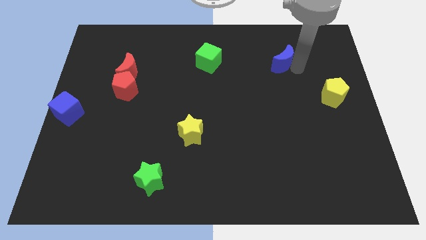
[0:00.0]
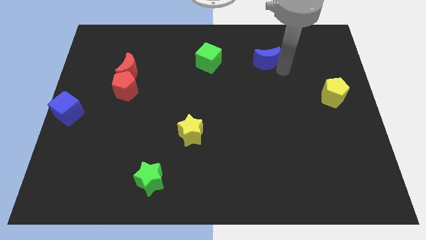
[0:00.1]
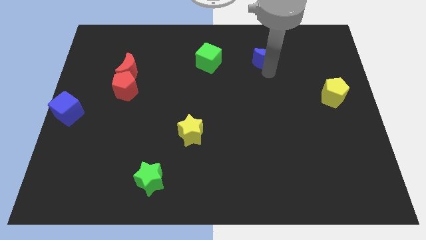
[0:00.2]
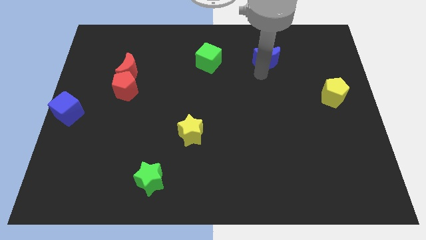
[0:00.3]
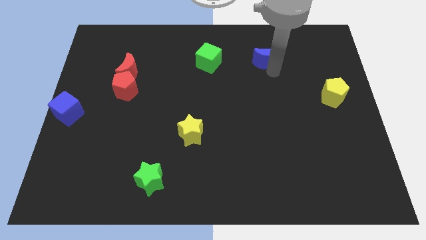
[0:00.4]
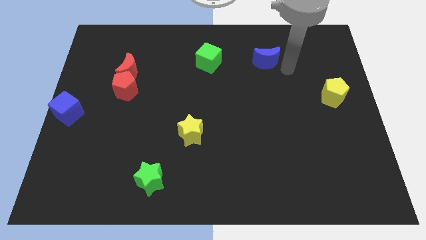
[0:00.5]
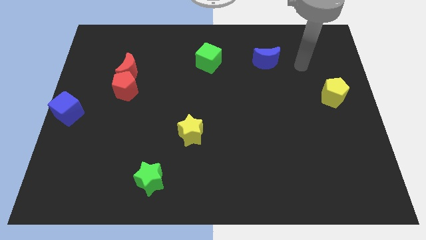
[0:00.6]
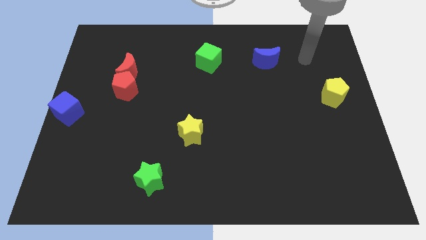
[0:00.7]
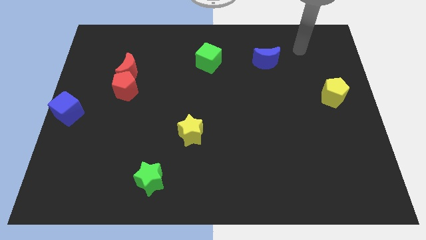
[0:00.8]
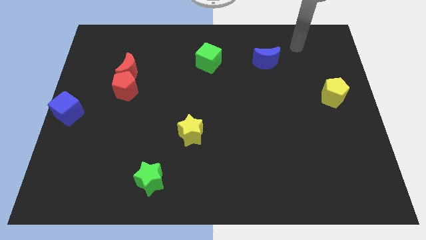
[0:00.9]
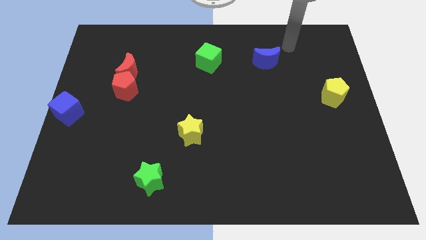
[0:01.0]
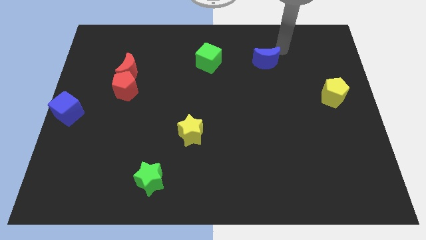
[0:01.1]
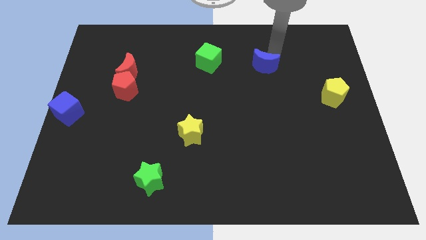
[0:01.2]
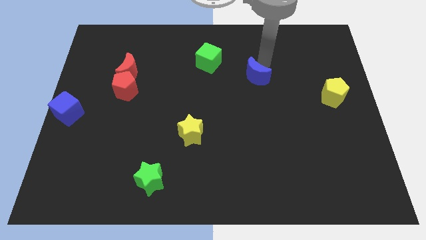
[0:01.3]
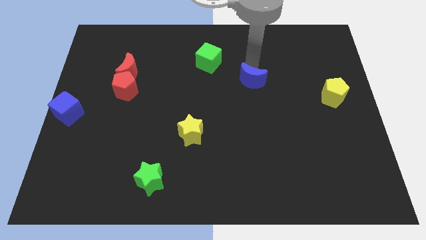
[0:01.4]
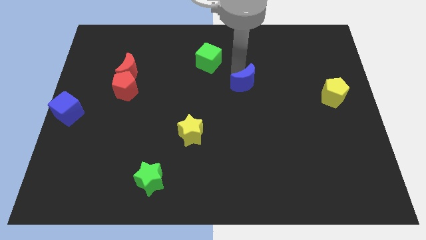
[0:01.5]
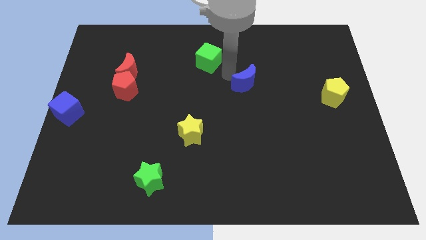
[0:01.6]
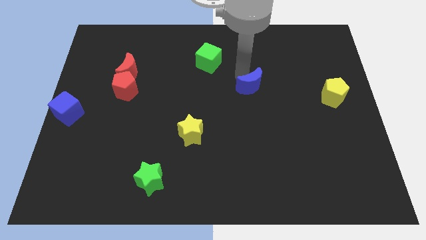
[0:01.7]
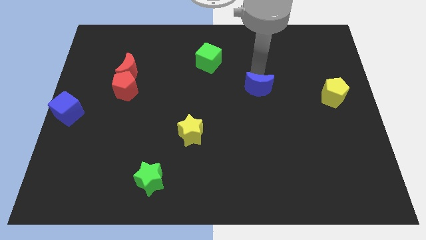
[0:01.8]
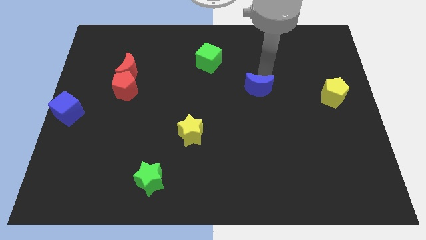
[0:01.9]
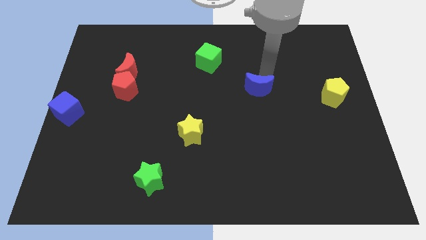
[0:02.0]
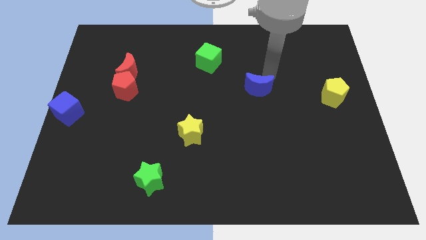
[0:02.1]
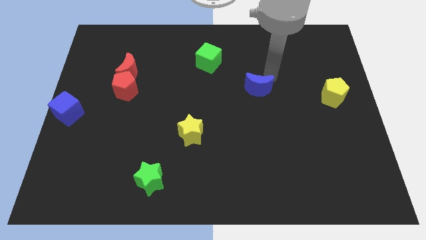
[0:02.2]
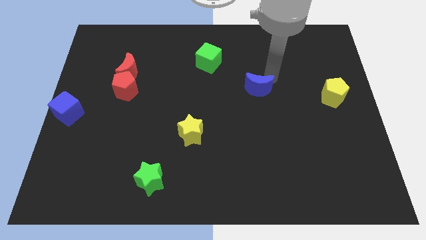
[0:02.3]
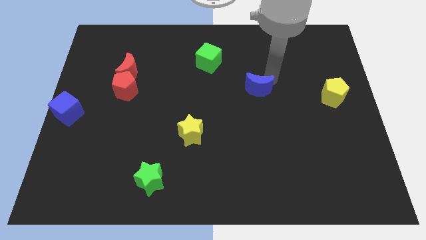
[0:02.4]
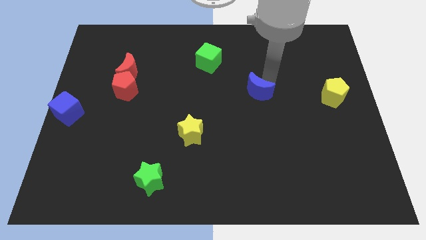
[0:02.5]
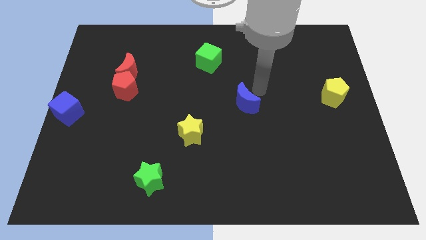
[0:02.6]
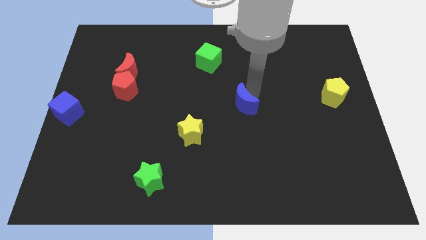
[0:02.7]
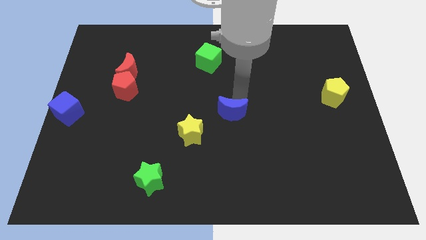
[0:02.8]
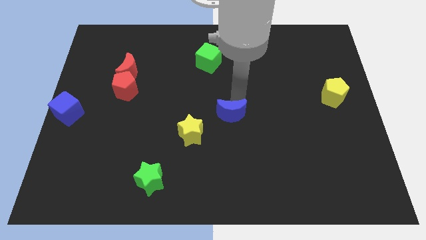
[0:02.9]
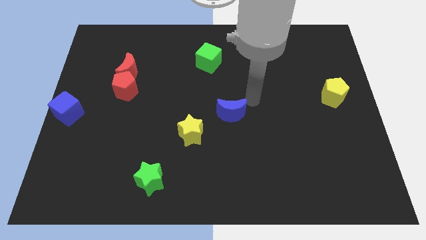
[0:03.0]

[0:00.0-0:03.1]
slide blue moon to the center

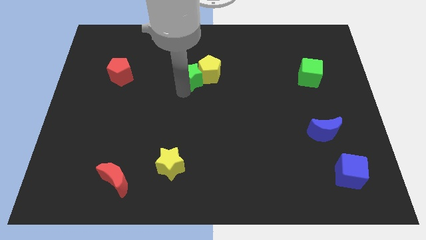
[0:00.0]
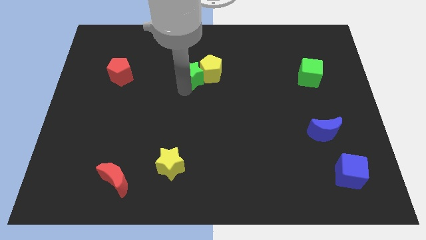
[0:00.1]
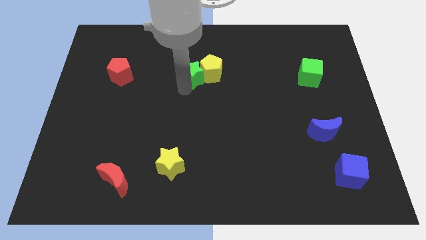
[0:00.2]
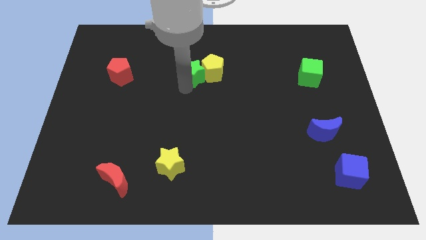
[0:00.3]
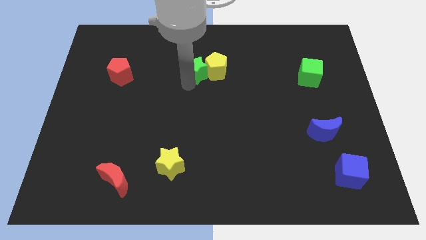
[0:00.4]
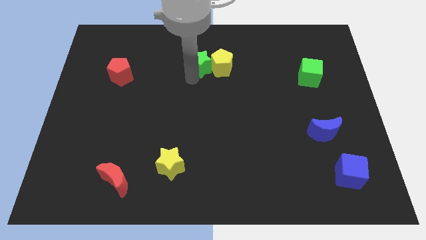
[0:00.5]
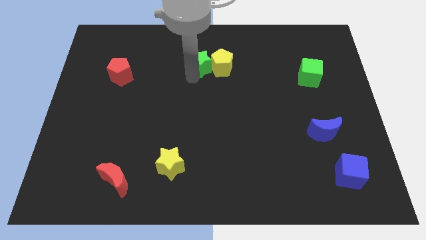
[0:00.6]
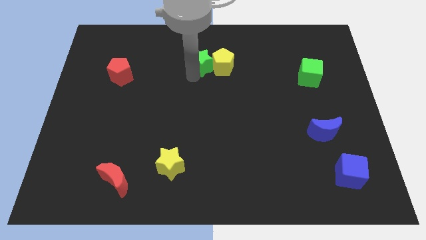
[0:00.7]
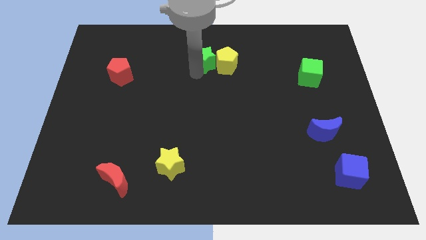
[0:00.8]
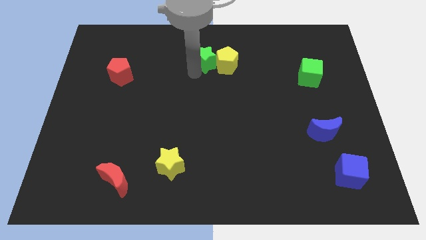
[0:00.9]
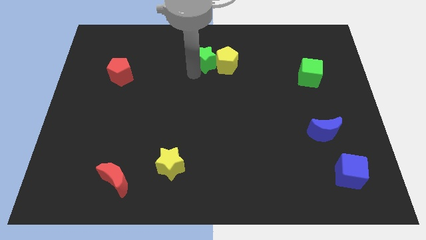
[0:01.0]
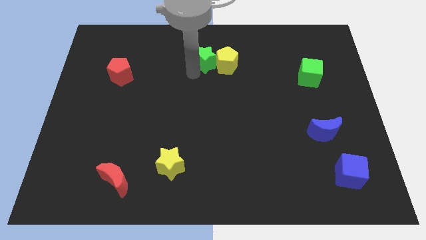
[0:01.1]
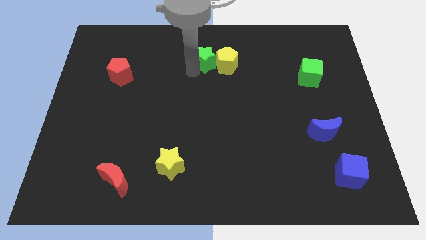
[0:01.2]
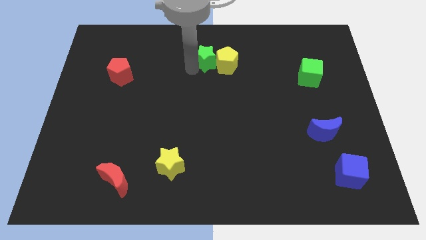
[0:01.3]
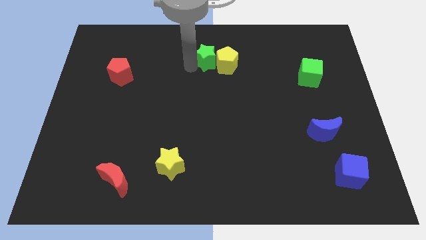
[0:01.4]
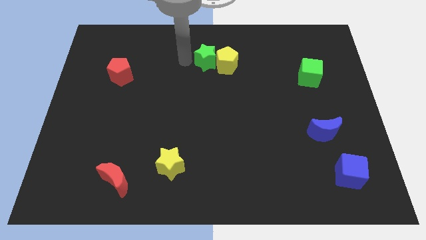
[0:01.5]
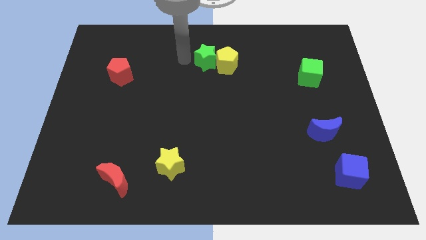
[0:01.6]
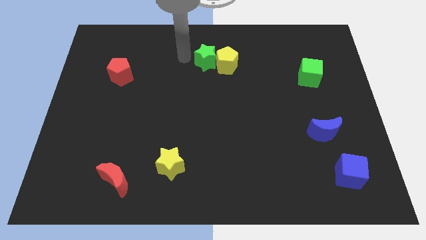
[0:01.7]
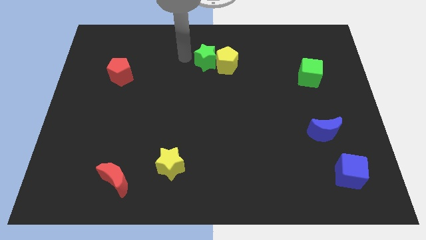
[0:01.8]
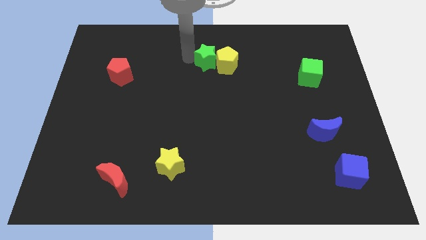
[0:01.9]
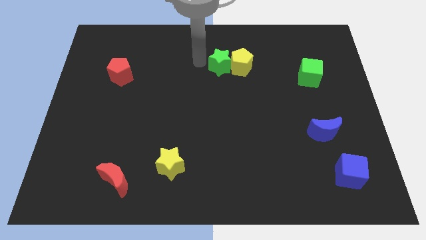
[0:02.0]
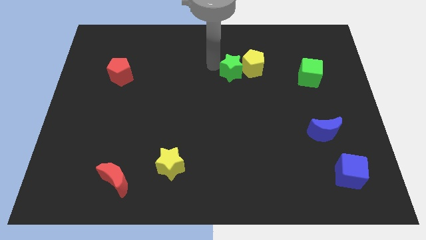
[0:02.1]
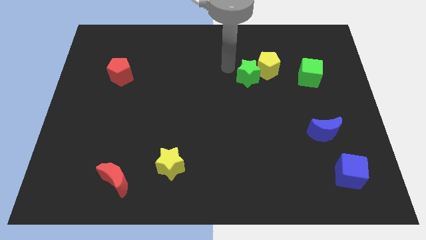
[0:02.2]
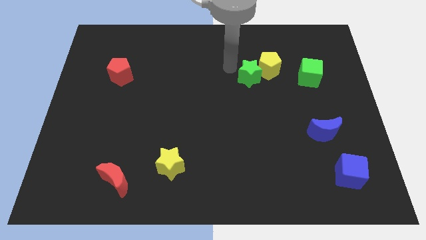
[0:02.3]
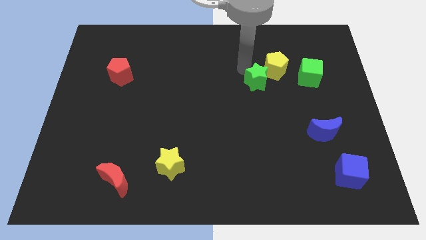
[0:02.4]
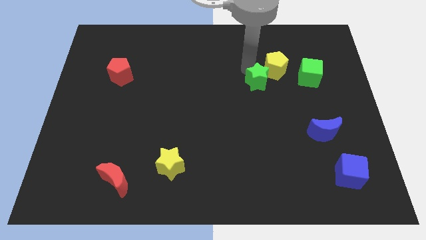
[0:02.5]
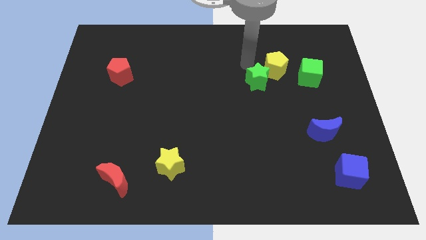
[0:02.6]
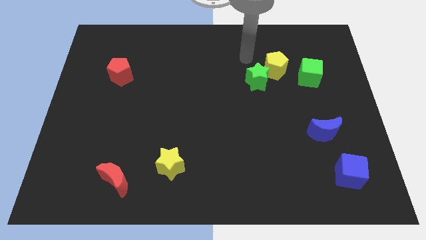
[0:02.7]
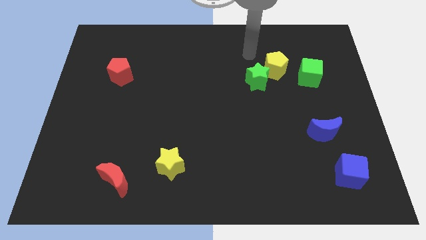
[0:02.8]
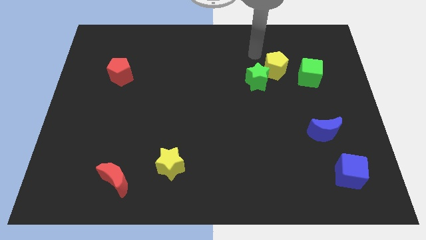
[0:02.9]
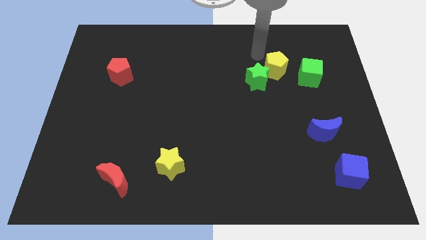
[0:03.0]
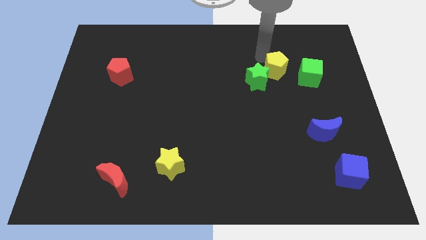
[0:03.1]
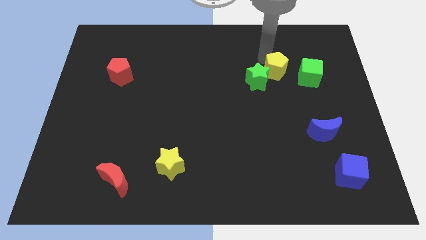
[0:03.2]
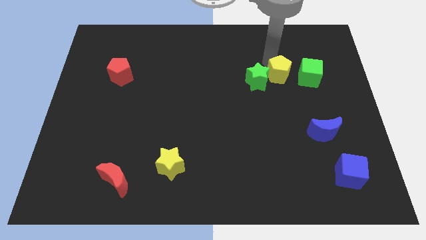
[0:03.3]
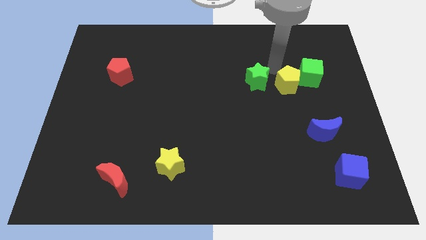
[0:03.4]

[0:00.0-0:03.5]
push the yellow pentagon in between the green blocks

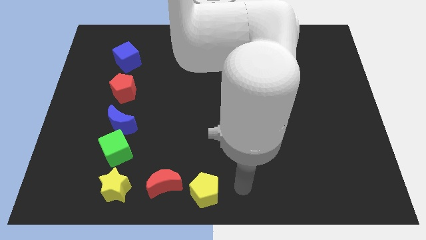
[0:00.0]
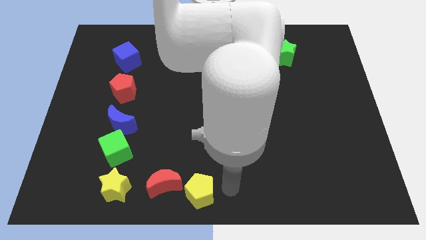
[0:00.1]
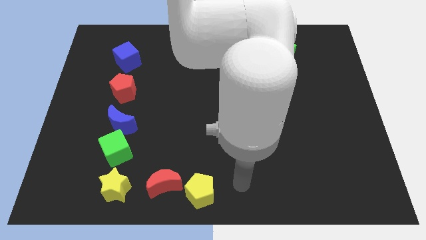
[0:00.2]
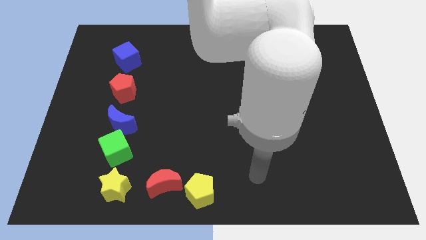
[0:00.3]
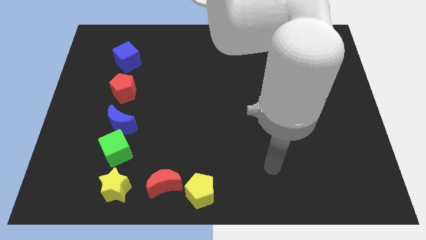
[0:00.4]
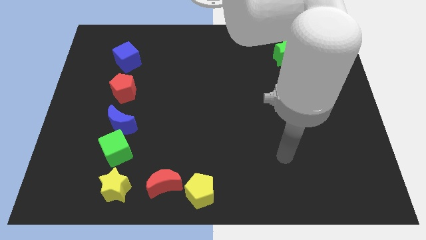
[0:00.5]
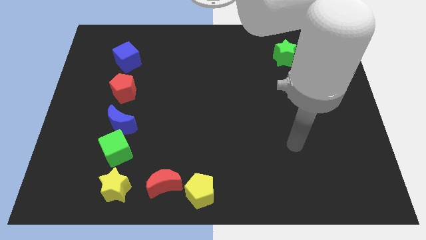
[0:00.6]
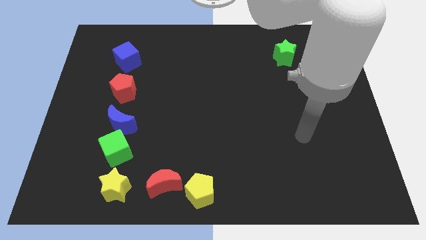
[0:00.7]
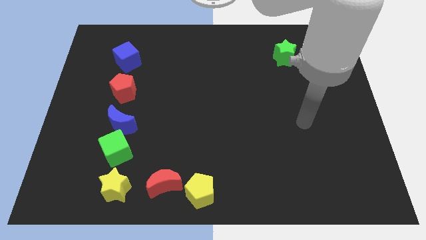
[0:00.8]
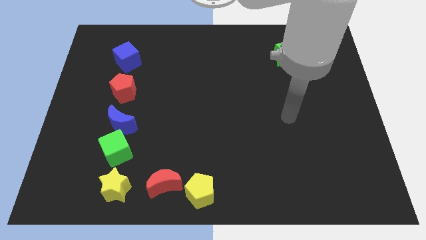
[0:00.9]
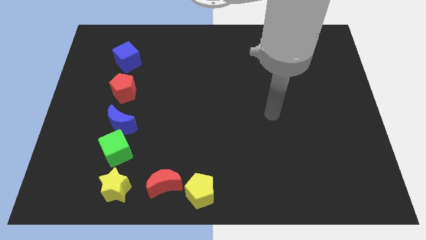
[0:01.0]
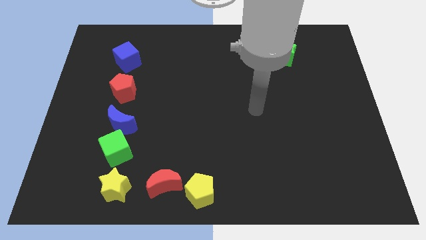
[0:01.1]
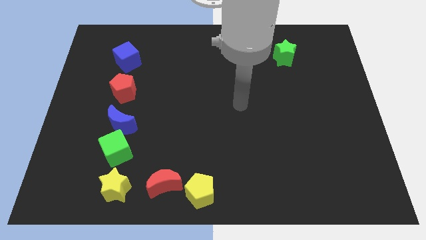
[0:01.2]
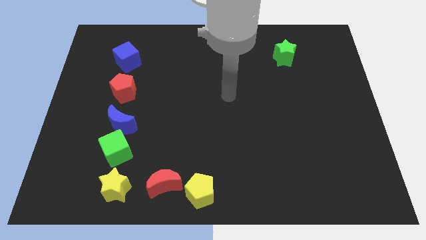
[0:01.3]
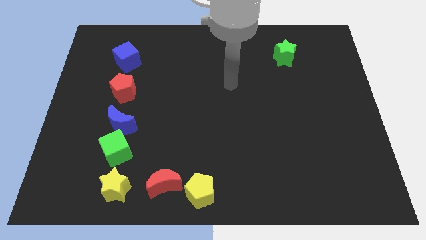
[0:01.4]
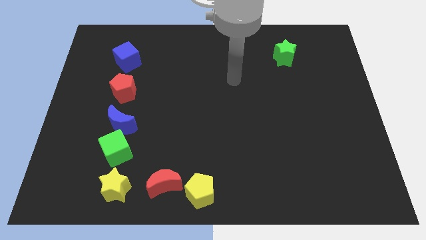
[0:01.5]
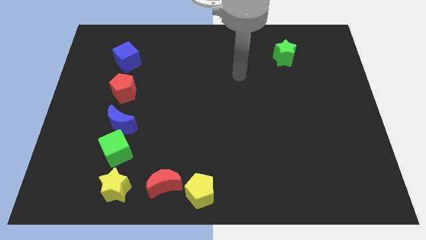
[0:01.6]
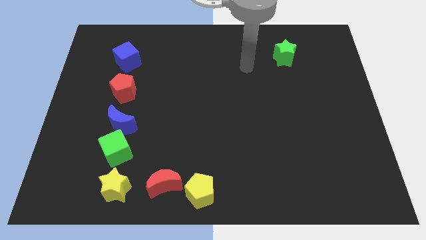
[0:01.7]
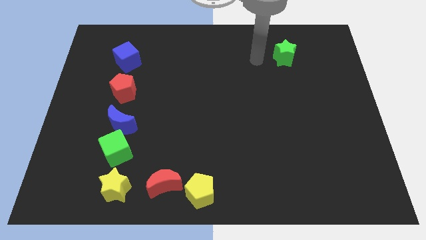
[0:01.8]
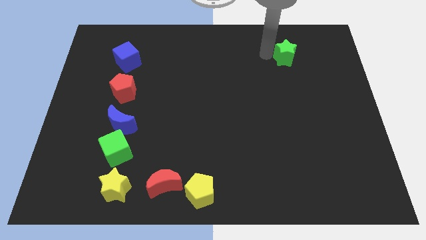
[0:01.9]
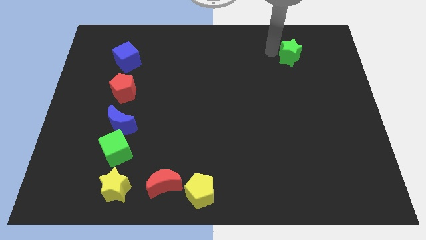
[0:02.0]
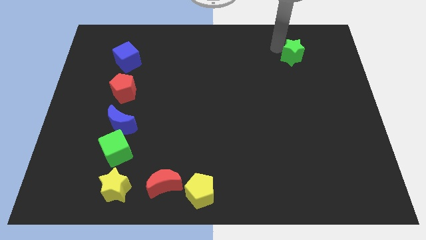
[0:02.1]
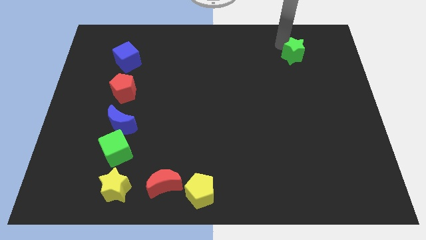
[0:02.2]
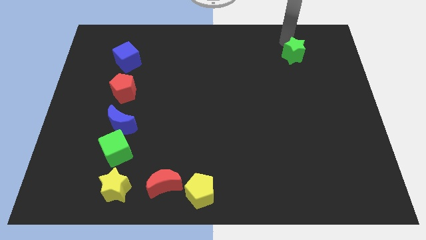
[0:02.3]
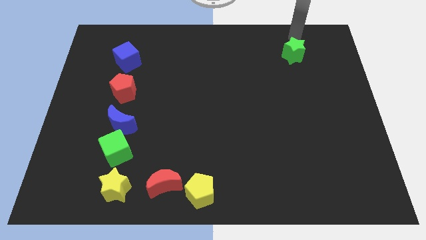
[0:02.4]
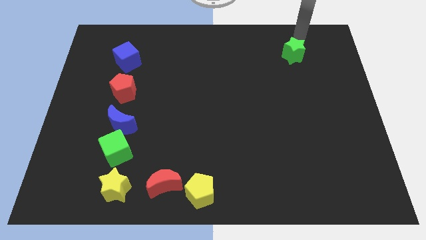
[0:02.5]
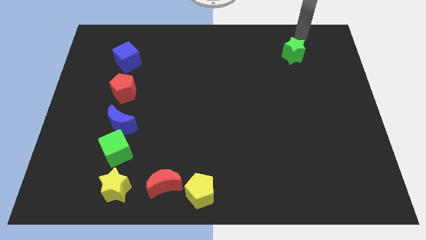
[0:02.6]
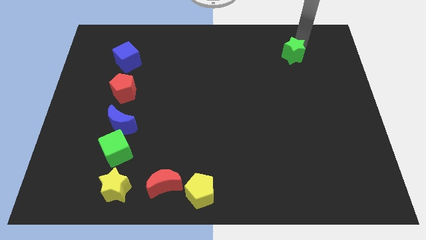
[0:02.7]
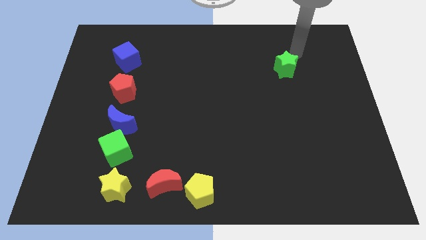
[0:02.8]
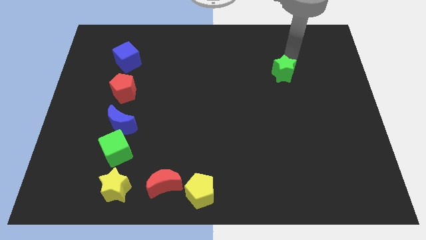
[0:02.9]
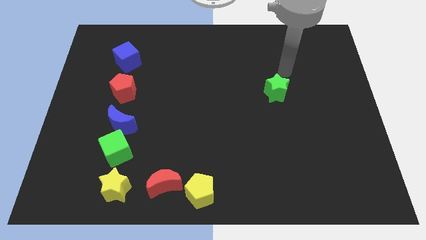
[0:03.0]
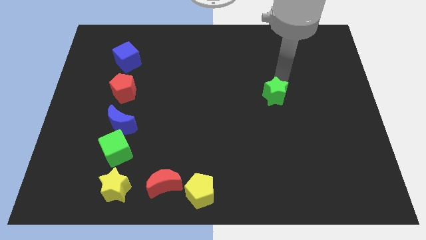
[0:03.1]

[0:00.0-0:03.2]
push the green star diagonally downwards
